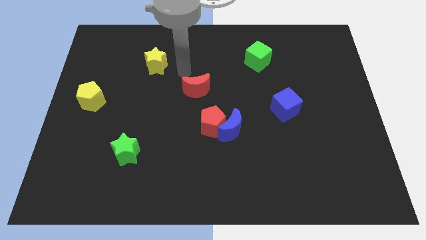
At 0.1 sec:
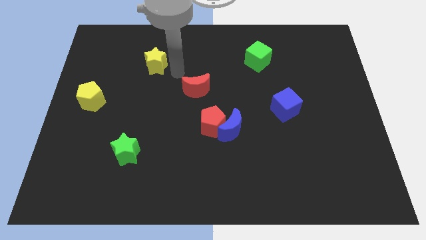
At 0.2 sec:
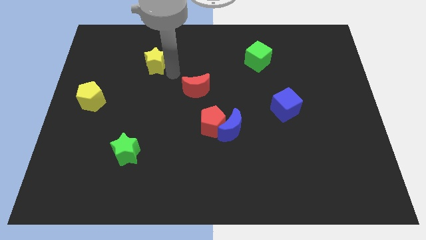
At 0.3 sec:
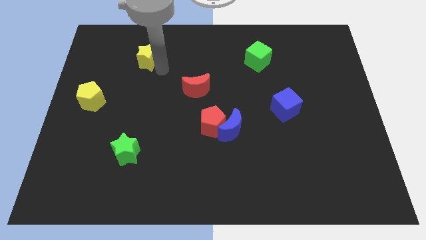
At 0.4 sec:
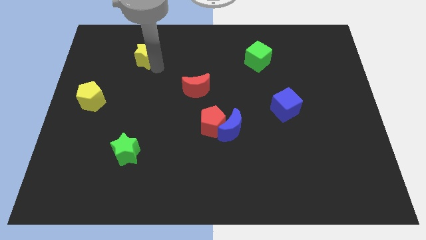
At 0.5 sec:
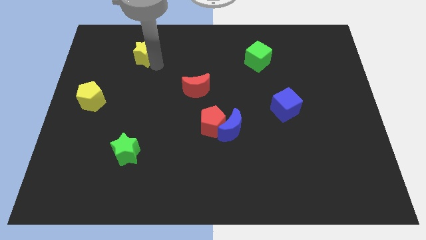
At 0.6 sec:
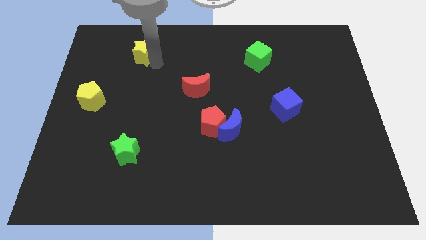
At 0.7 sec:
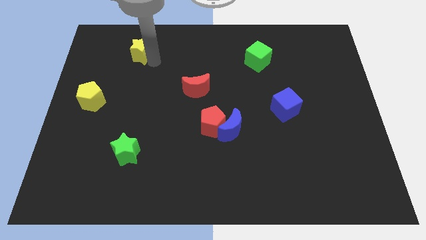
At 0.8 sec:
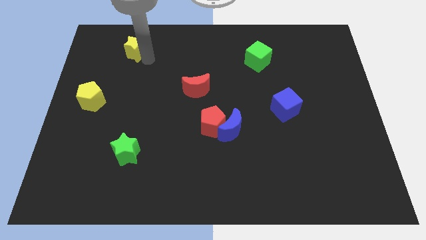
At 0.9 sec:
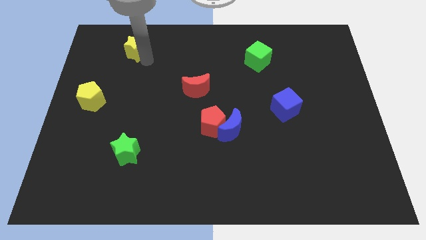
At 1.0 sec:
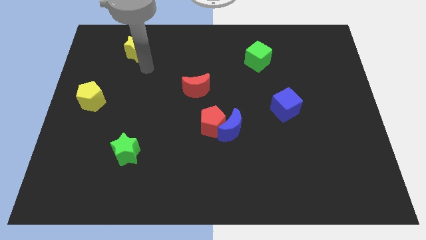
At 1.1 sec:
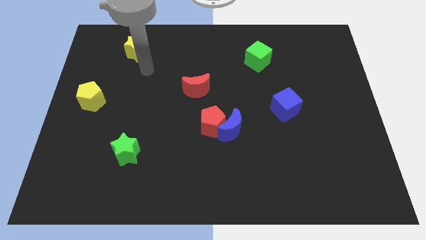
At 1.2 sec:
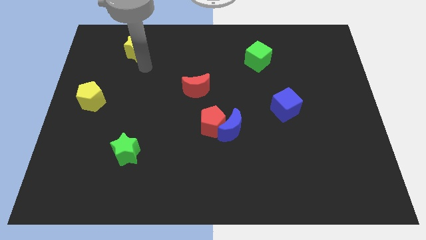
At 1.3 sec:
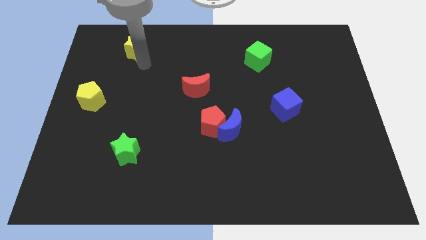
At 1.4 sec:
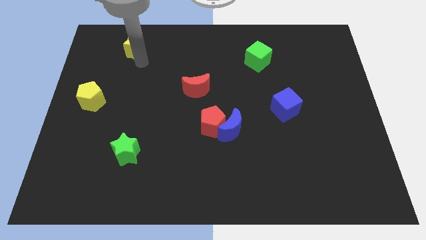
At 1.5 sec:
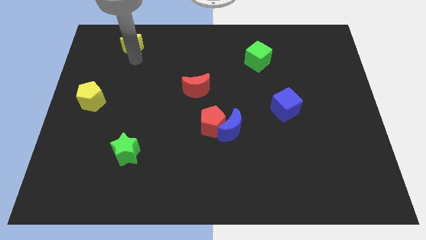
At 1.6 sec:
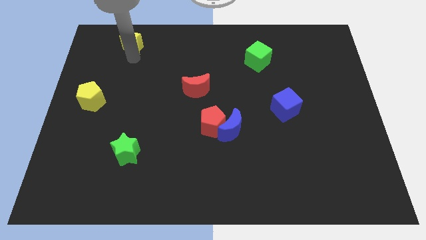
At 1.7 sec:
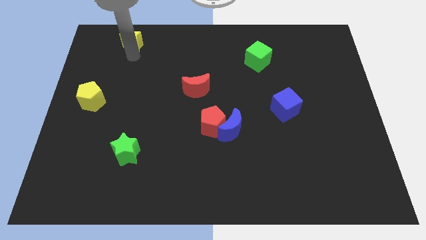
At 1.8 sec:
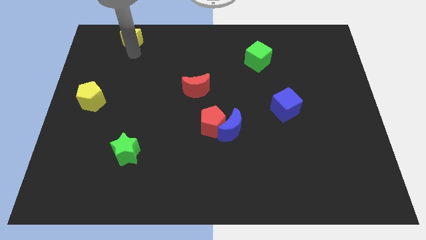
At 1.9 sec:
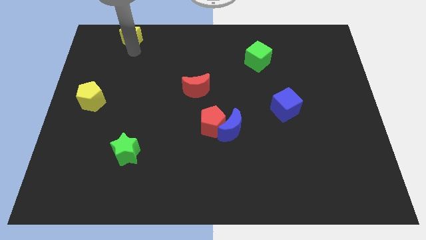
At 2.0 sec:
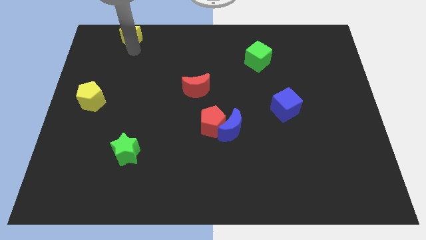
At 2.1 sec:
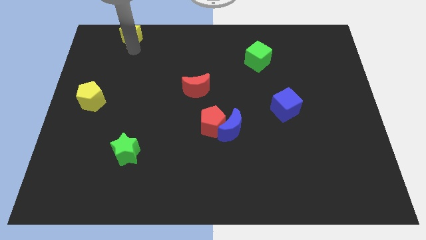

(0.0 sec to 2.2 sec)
push the yellow star upward

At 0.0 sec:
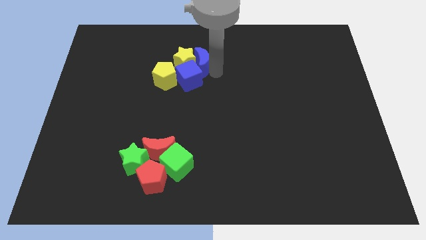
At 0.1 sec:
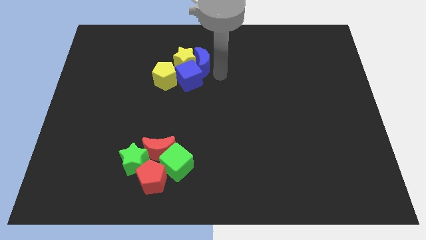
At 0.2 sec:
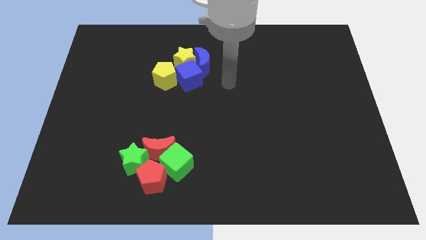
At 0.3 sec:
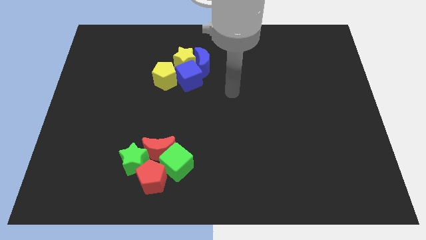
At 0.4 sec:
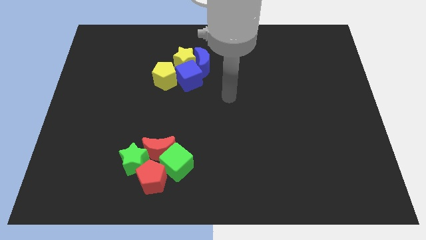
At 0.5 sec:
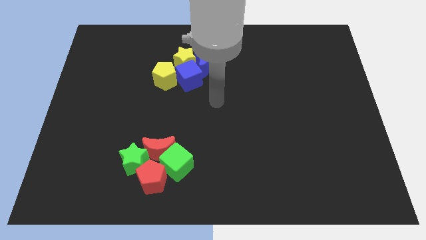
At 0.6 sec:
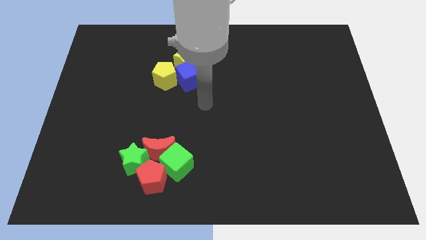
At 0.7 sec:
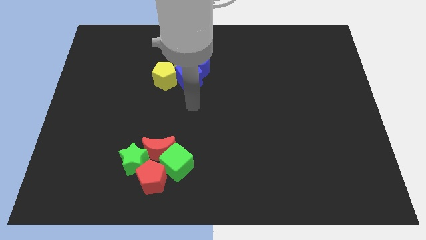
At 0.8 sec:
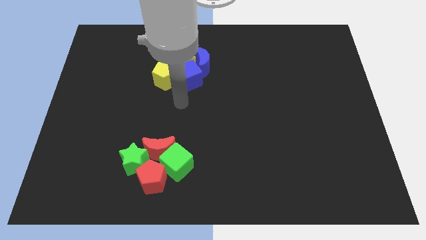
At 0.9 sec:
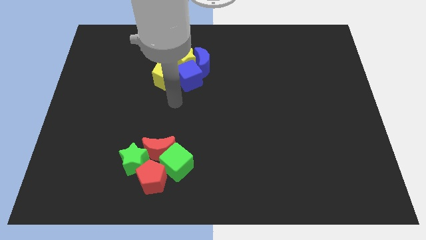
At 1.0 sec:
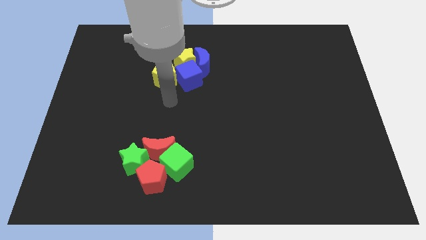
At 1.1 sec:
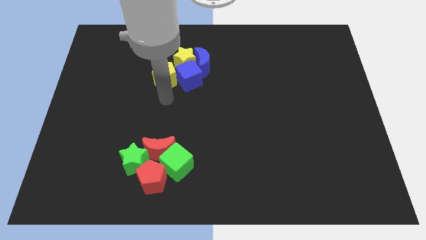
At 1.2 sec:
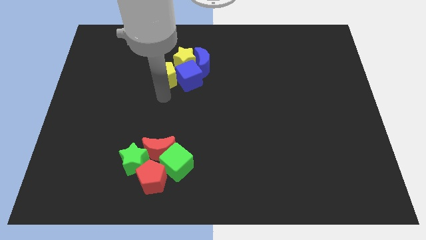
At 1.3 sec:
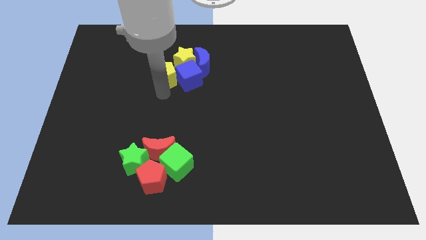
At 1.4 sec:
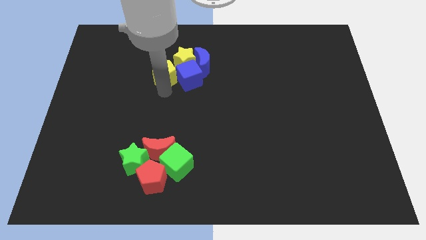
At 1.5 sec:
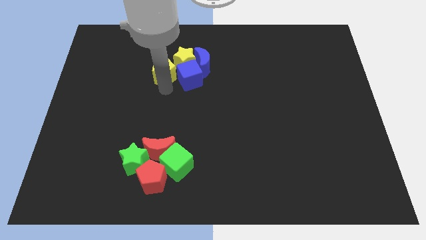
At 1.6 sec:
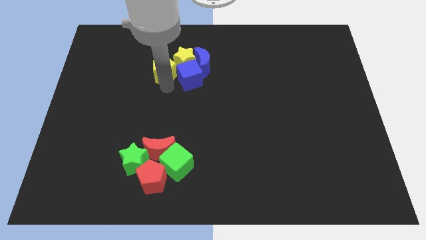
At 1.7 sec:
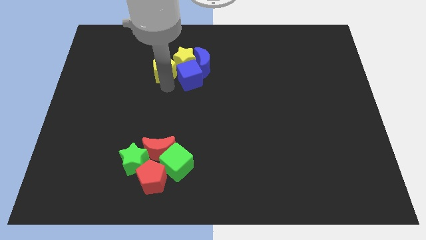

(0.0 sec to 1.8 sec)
slightly push the yellow pentagon to bottom left of yellow star

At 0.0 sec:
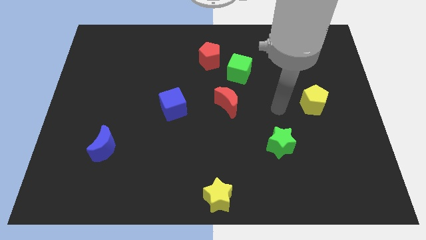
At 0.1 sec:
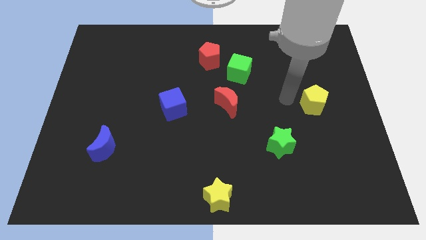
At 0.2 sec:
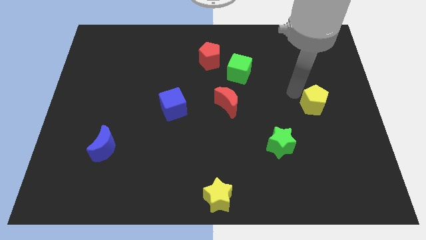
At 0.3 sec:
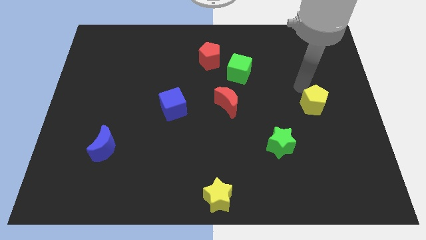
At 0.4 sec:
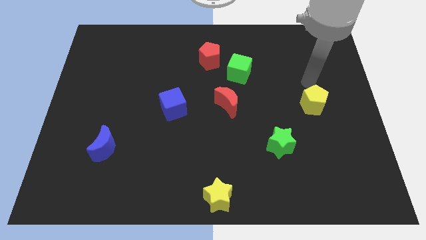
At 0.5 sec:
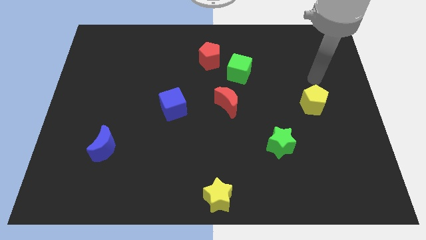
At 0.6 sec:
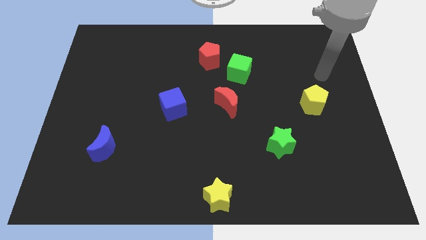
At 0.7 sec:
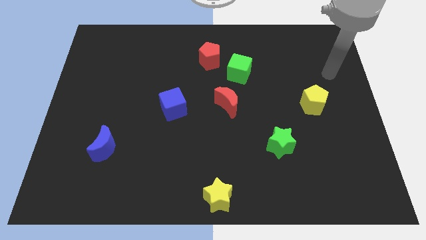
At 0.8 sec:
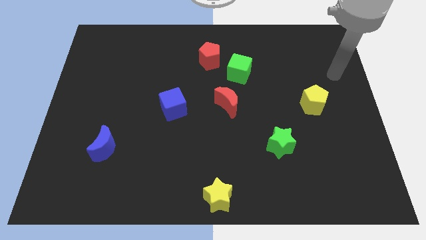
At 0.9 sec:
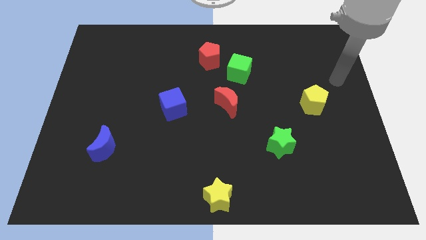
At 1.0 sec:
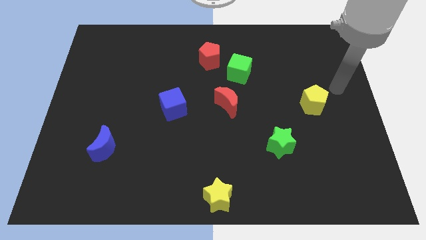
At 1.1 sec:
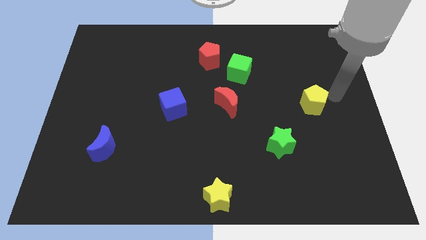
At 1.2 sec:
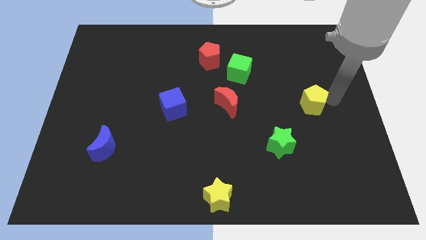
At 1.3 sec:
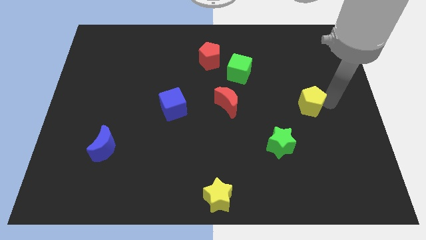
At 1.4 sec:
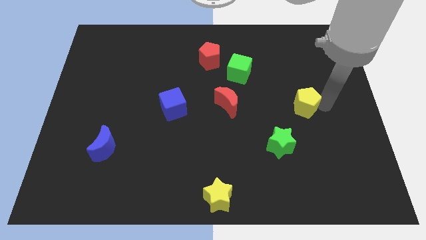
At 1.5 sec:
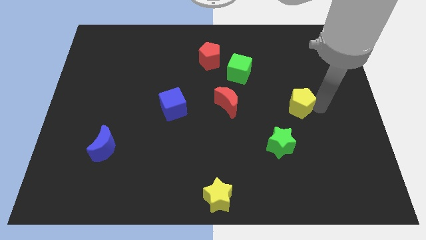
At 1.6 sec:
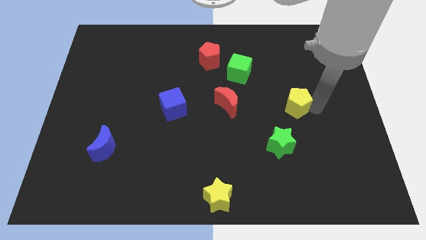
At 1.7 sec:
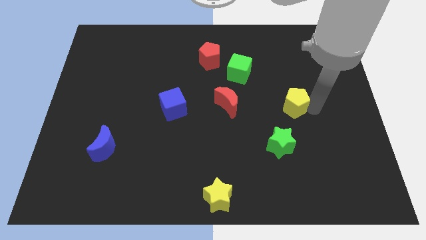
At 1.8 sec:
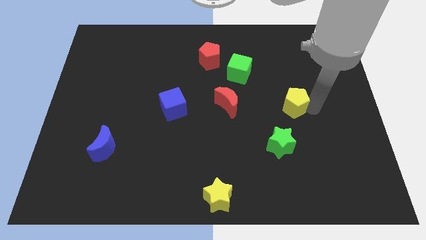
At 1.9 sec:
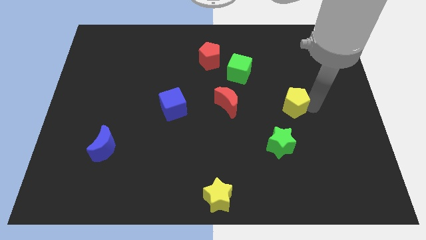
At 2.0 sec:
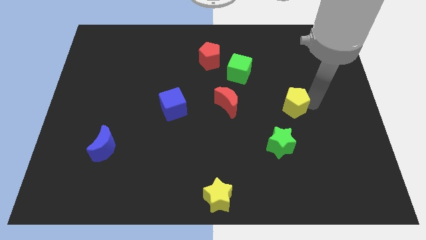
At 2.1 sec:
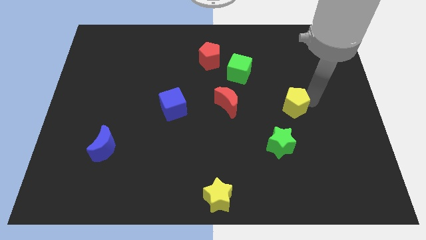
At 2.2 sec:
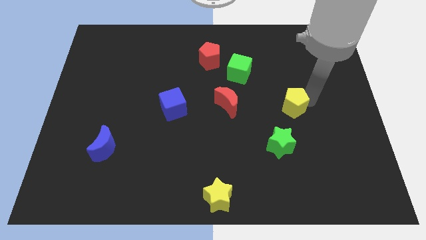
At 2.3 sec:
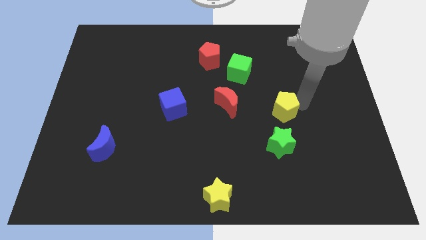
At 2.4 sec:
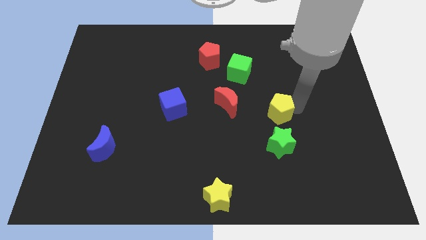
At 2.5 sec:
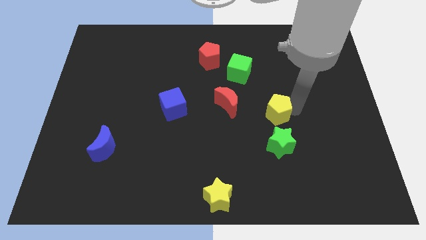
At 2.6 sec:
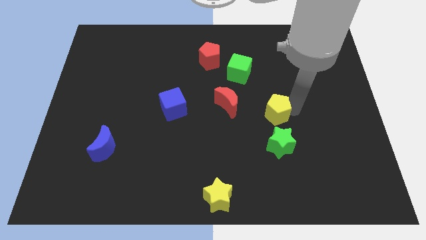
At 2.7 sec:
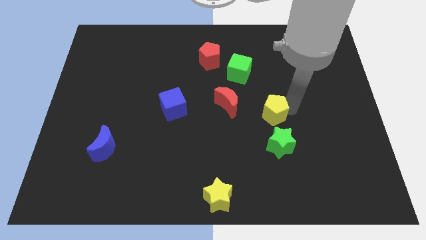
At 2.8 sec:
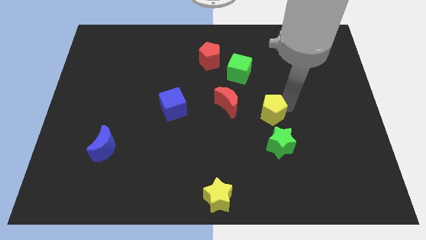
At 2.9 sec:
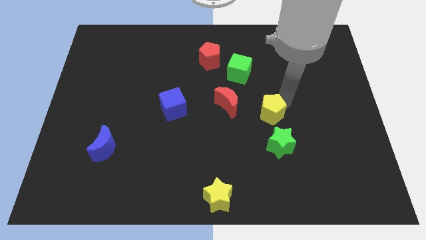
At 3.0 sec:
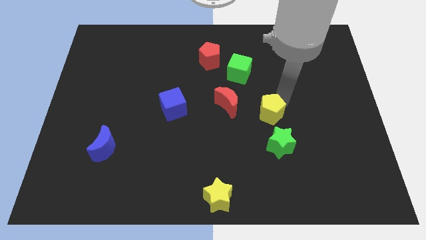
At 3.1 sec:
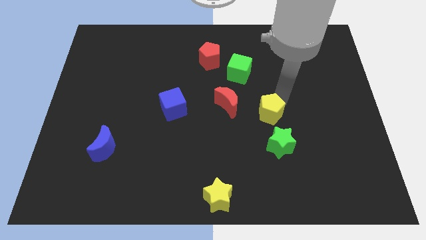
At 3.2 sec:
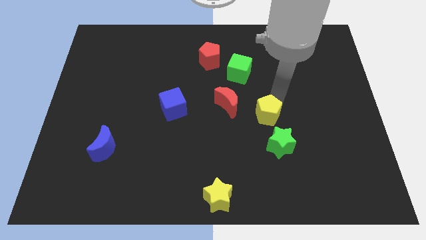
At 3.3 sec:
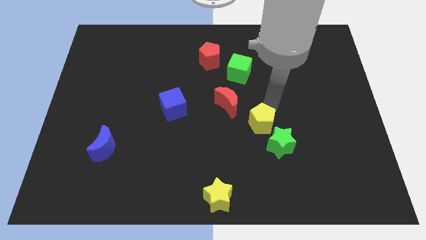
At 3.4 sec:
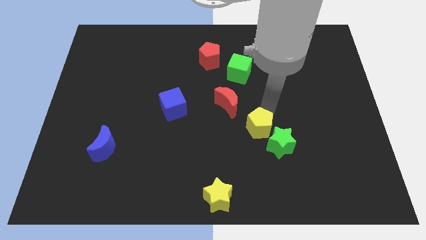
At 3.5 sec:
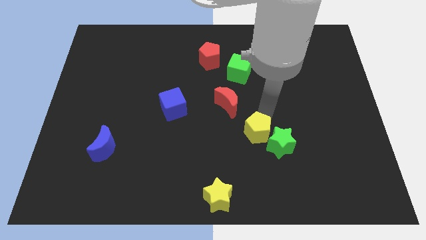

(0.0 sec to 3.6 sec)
move the yellow pentagon diagonally in between the red moon and green star

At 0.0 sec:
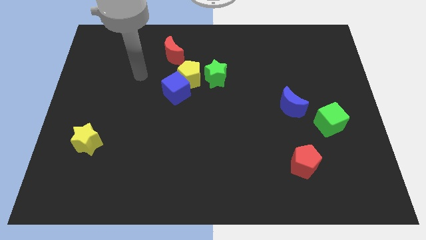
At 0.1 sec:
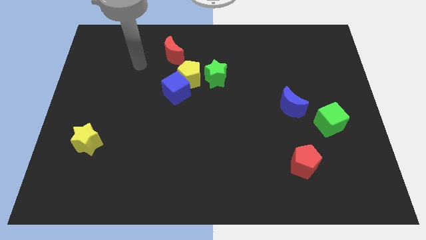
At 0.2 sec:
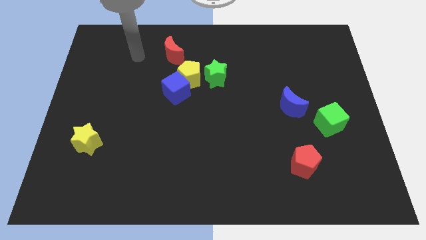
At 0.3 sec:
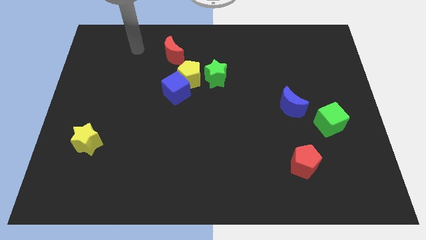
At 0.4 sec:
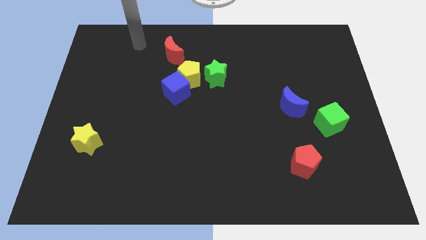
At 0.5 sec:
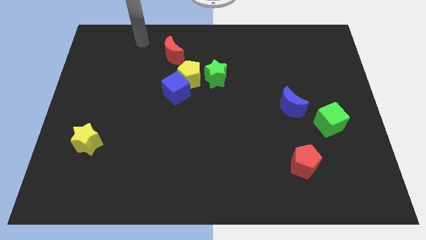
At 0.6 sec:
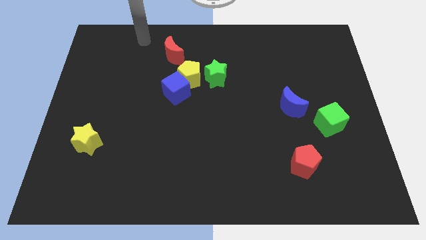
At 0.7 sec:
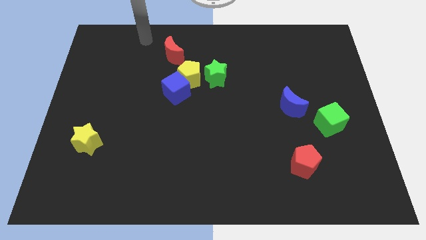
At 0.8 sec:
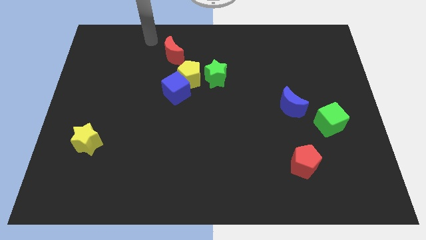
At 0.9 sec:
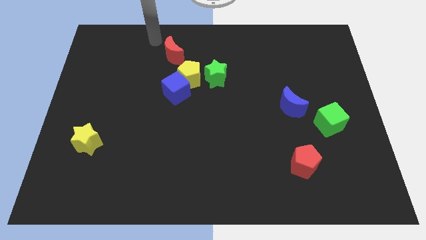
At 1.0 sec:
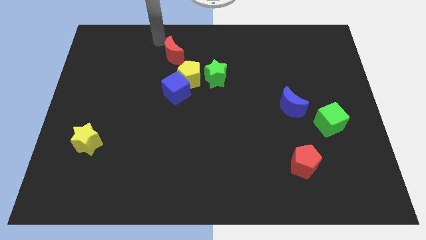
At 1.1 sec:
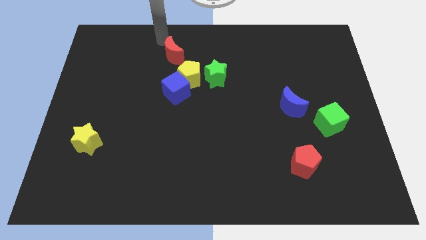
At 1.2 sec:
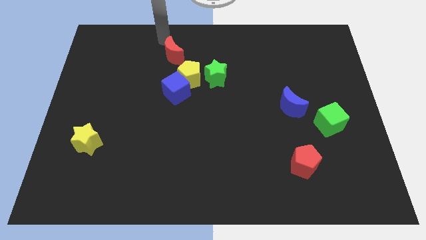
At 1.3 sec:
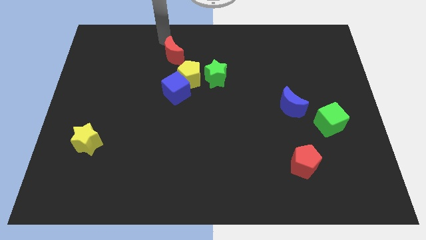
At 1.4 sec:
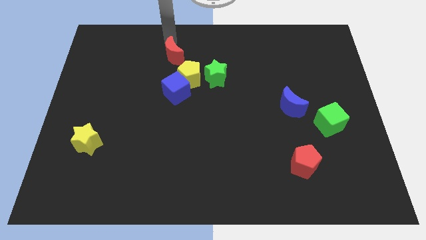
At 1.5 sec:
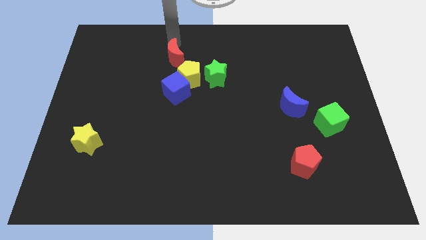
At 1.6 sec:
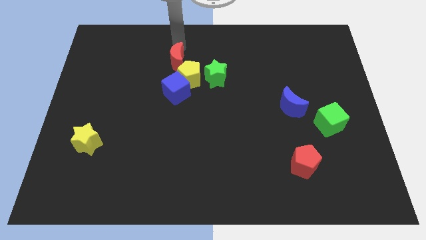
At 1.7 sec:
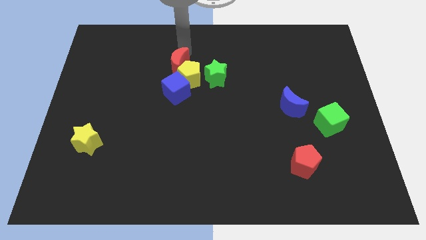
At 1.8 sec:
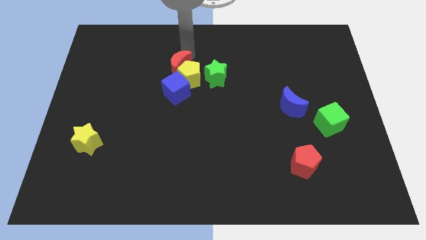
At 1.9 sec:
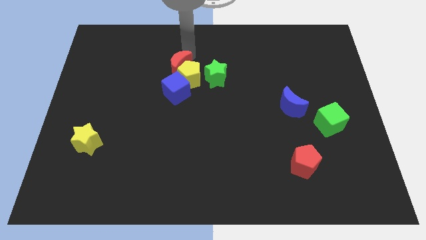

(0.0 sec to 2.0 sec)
place the red crescent above the yellow pentagon
